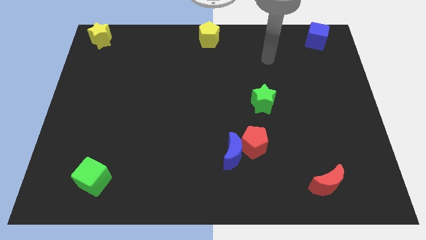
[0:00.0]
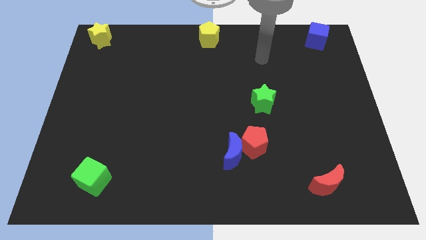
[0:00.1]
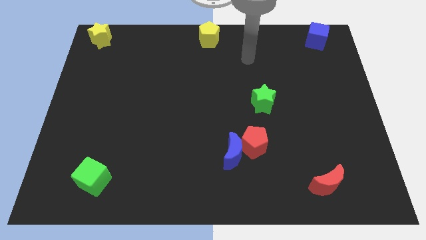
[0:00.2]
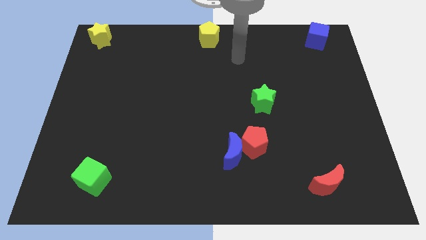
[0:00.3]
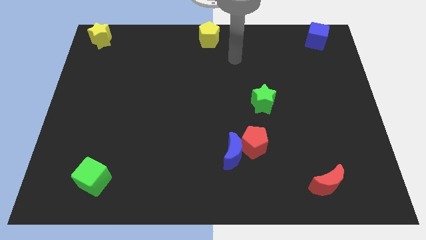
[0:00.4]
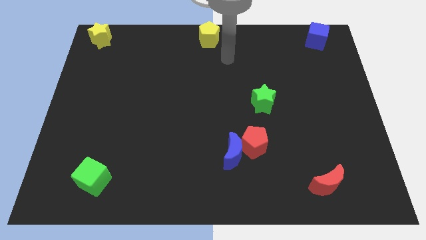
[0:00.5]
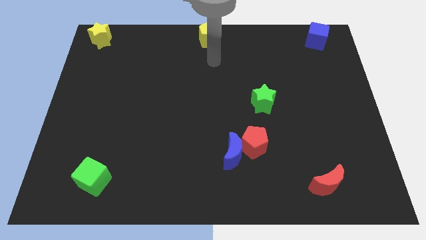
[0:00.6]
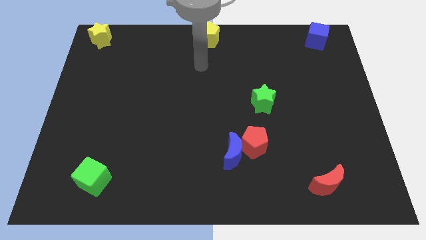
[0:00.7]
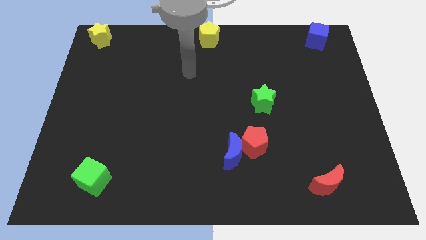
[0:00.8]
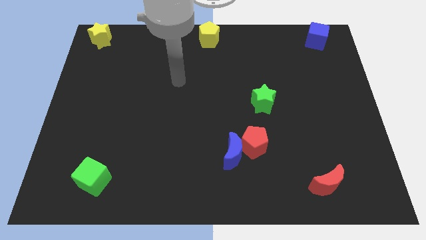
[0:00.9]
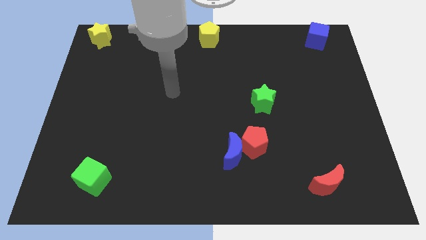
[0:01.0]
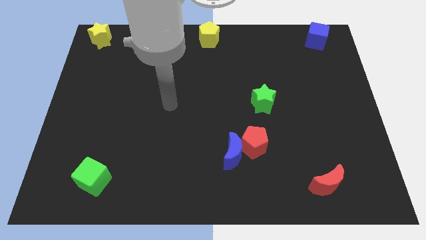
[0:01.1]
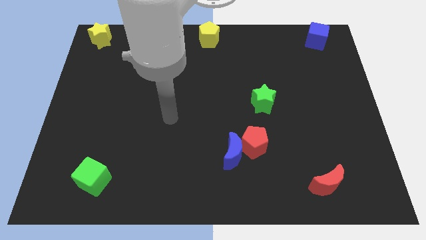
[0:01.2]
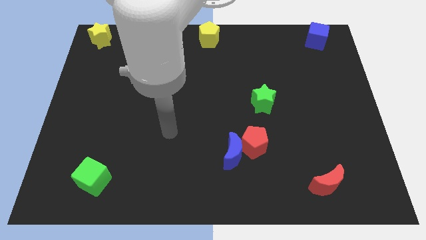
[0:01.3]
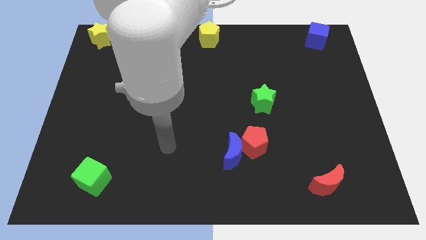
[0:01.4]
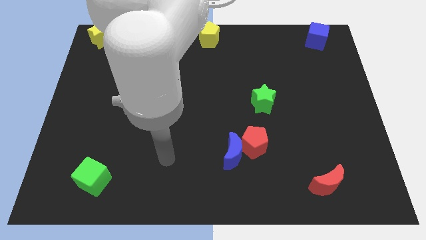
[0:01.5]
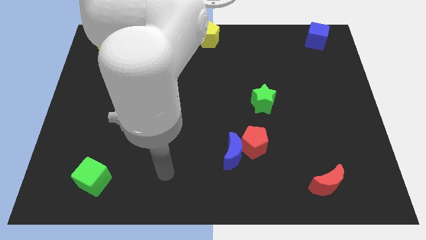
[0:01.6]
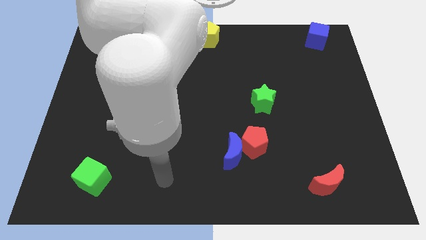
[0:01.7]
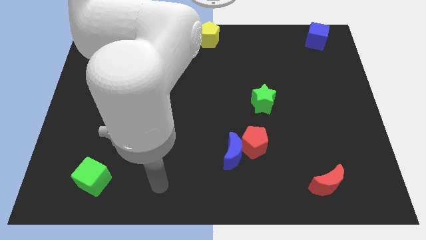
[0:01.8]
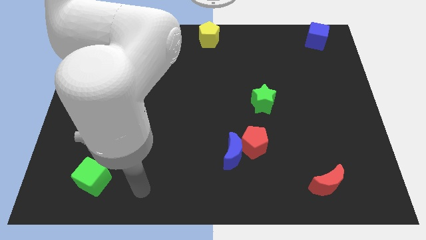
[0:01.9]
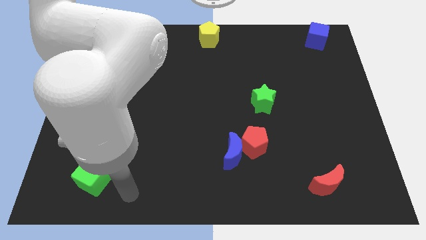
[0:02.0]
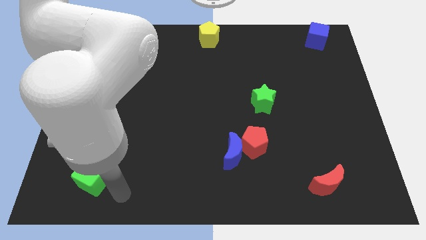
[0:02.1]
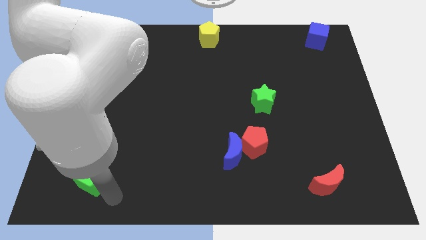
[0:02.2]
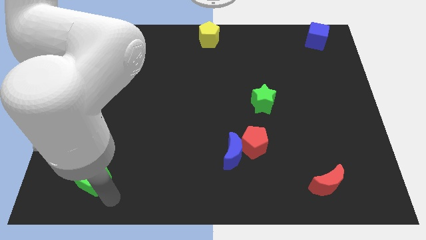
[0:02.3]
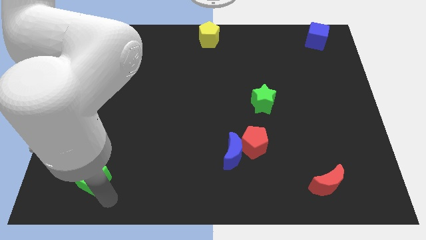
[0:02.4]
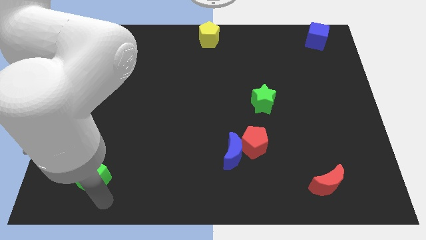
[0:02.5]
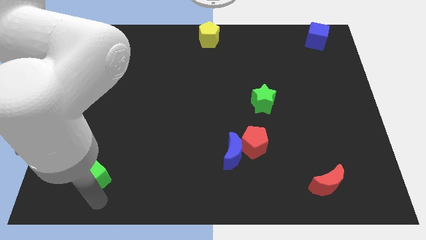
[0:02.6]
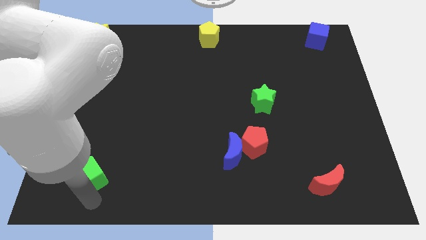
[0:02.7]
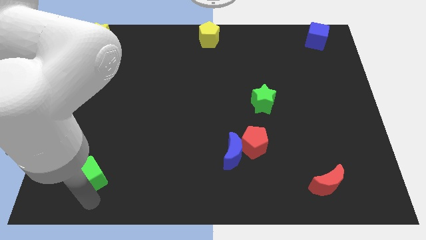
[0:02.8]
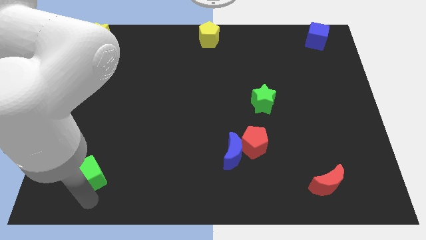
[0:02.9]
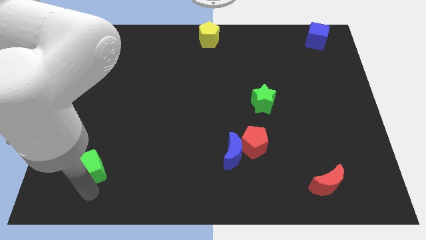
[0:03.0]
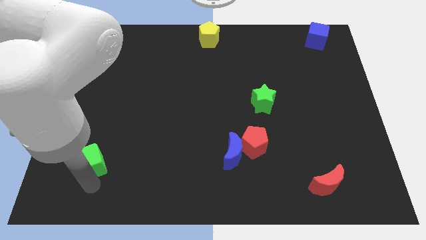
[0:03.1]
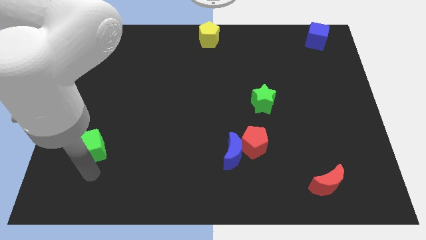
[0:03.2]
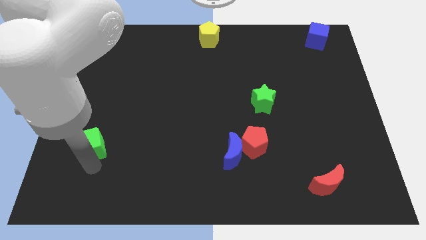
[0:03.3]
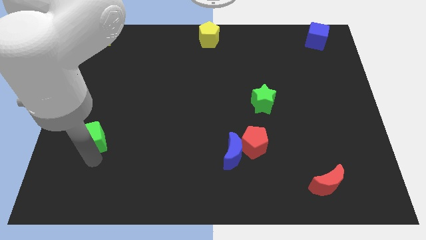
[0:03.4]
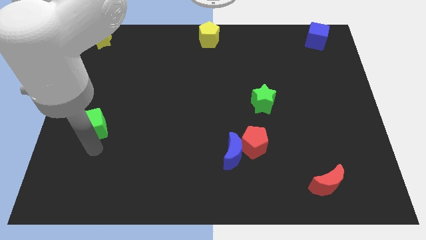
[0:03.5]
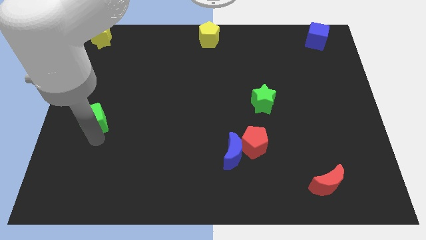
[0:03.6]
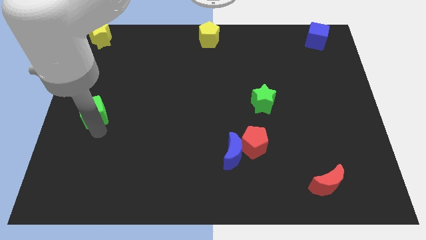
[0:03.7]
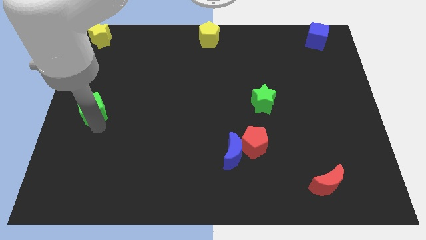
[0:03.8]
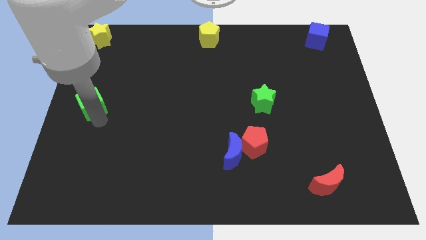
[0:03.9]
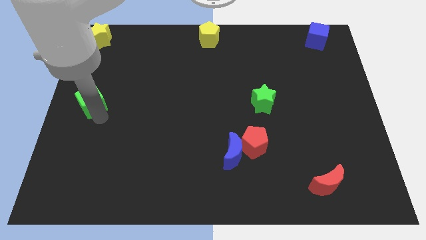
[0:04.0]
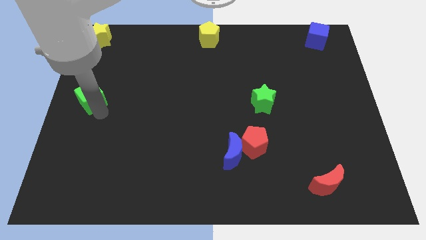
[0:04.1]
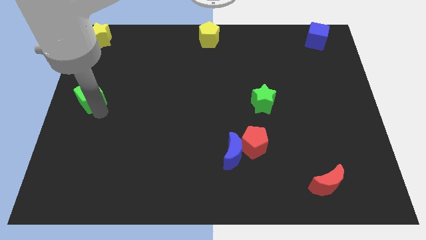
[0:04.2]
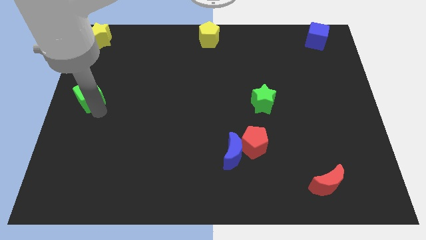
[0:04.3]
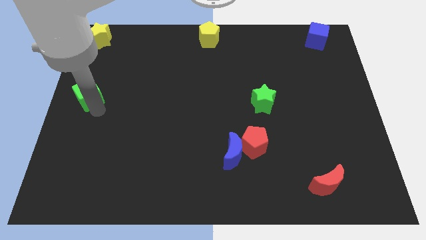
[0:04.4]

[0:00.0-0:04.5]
move the green cube to the left of the green star

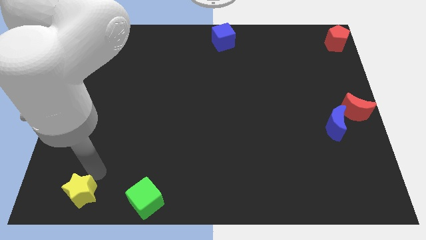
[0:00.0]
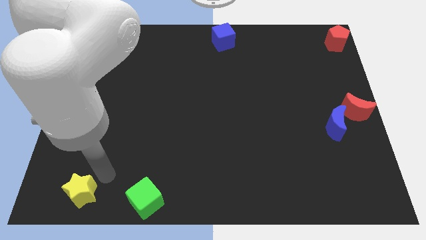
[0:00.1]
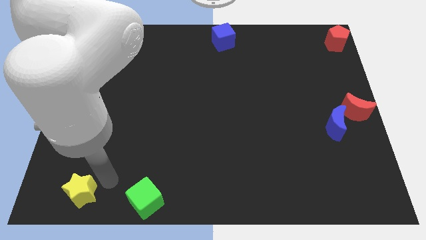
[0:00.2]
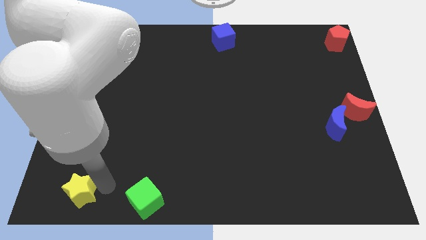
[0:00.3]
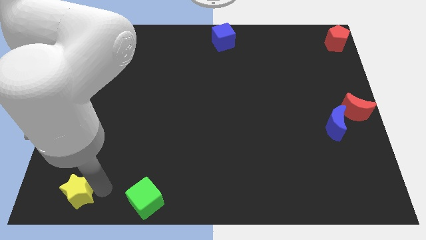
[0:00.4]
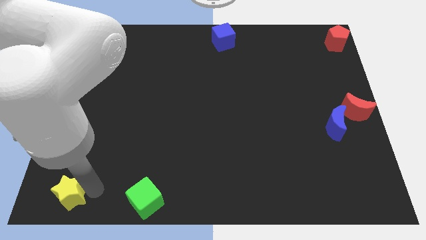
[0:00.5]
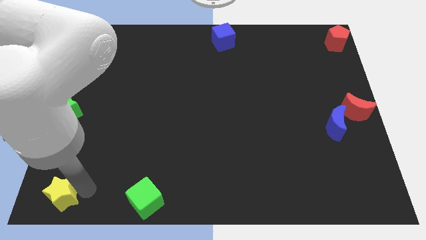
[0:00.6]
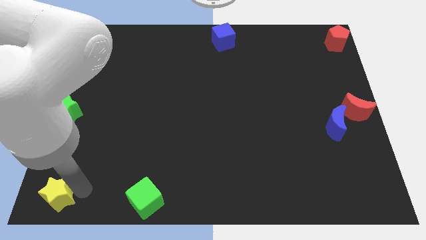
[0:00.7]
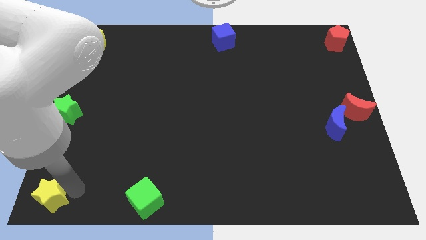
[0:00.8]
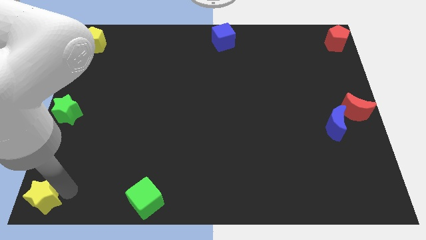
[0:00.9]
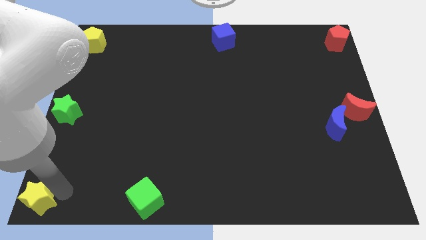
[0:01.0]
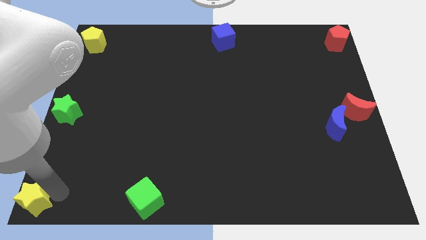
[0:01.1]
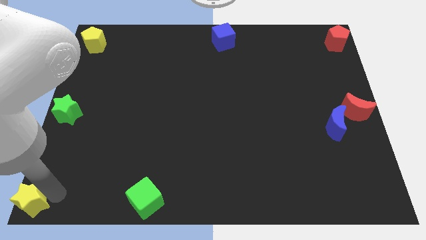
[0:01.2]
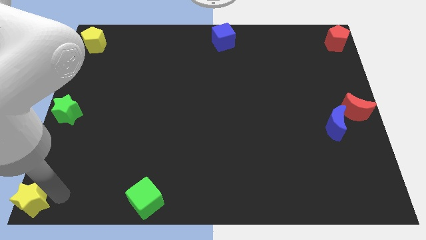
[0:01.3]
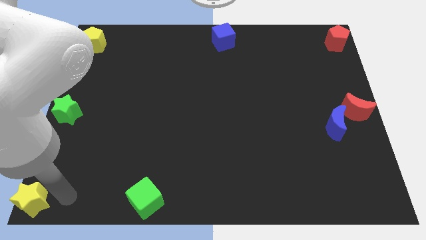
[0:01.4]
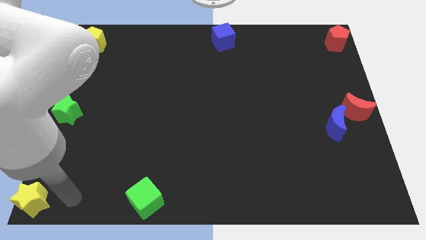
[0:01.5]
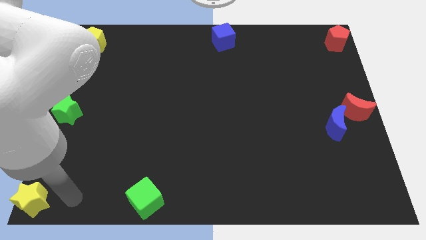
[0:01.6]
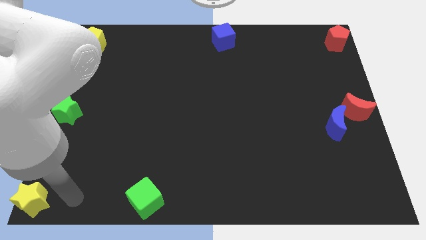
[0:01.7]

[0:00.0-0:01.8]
move the yellow star to bottom left corner of the board

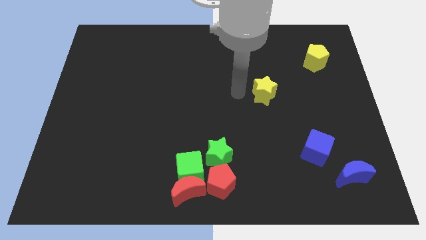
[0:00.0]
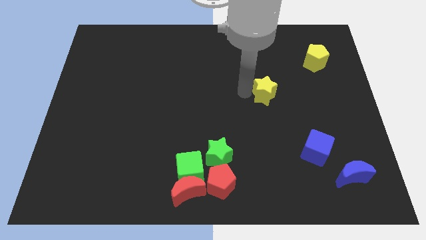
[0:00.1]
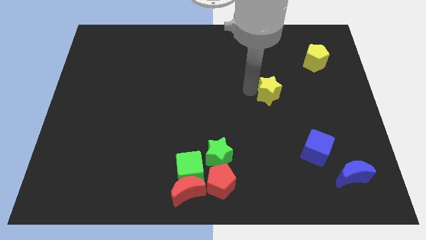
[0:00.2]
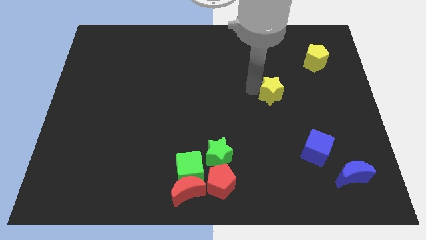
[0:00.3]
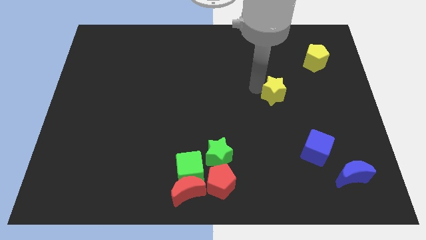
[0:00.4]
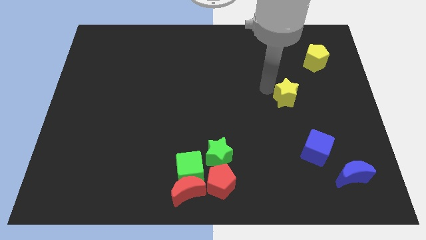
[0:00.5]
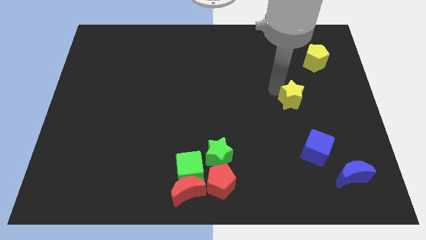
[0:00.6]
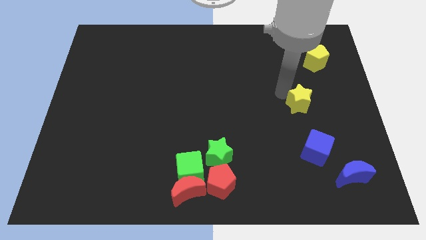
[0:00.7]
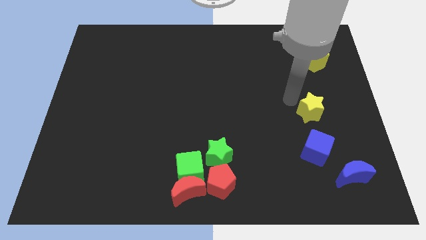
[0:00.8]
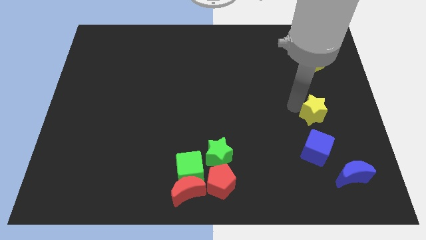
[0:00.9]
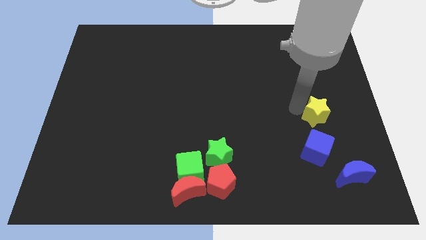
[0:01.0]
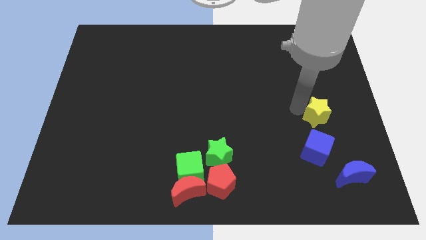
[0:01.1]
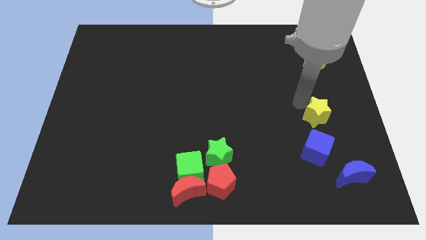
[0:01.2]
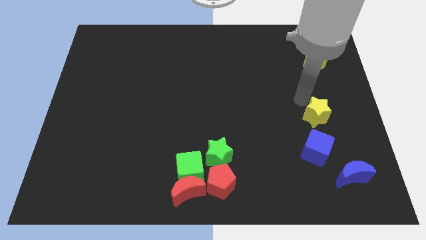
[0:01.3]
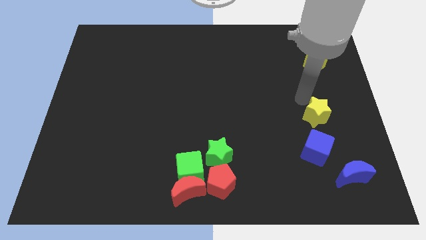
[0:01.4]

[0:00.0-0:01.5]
slide the yellow star to top of blue cube

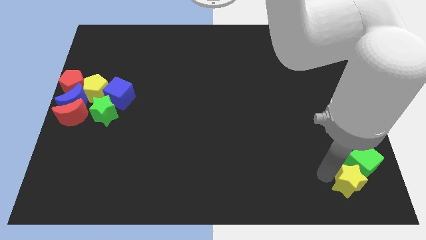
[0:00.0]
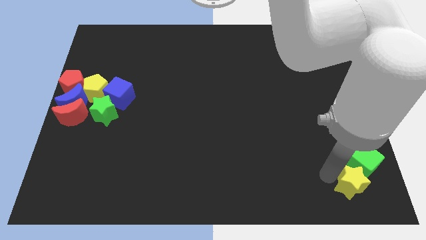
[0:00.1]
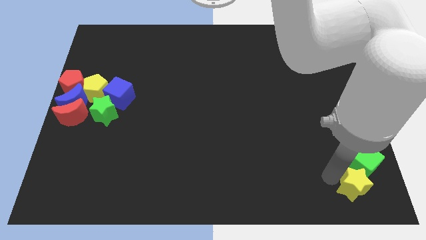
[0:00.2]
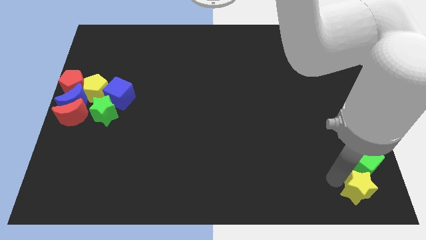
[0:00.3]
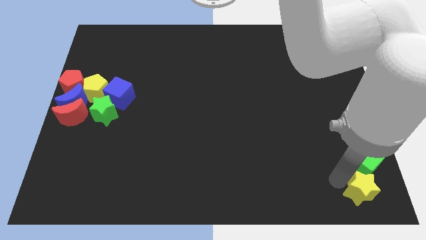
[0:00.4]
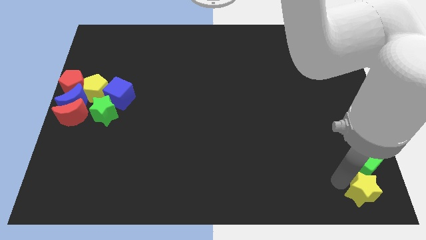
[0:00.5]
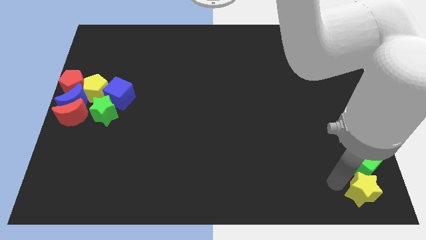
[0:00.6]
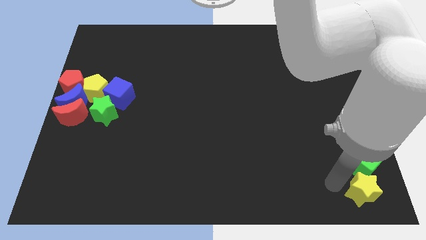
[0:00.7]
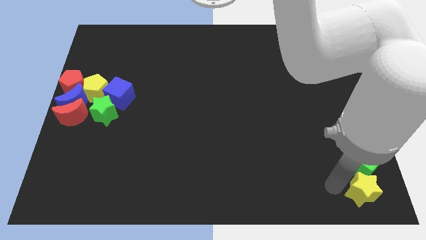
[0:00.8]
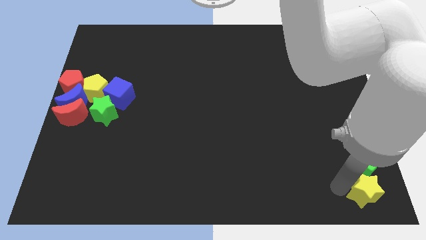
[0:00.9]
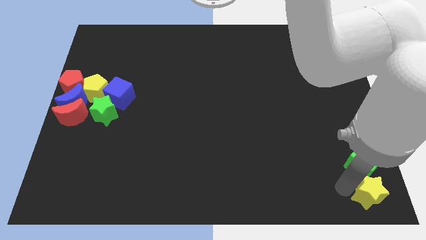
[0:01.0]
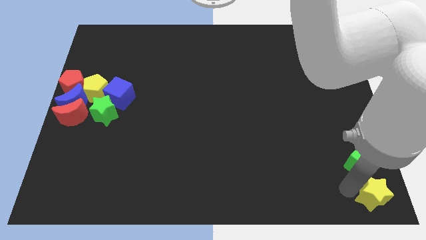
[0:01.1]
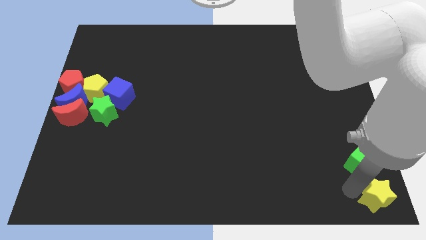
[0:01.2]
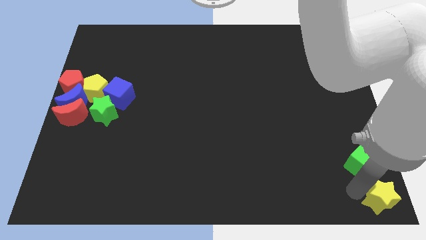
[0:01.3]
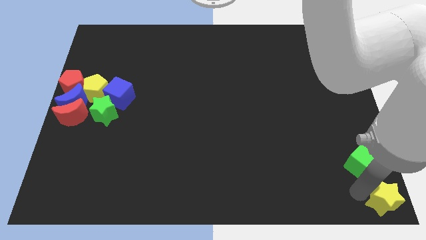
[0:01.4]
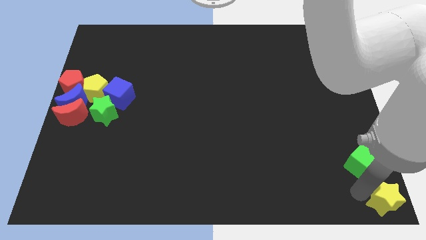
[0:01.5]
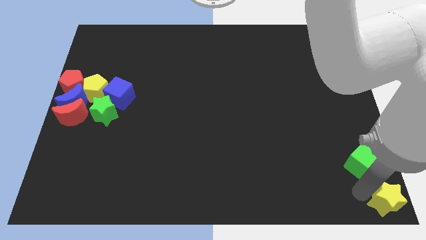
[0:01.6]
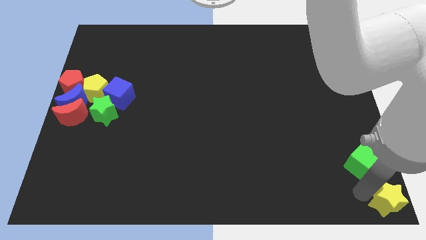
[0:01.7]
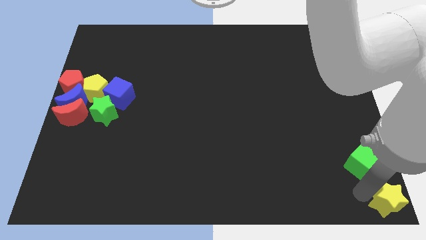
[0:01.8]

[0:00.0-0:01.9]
move the yellow star to the bottom right side corner of the board
